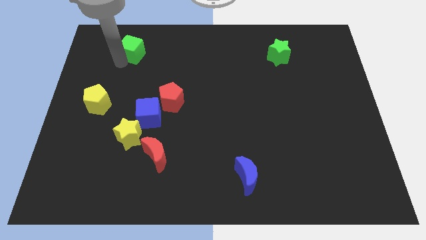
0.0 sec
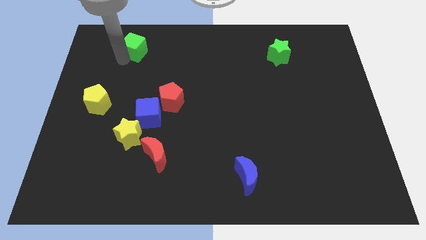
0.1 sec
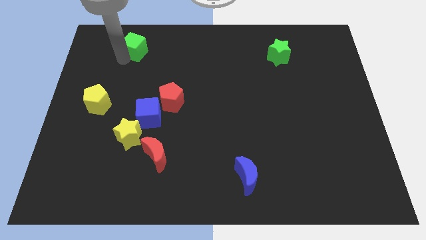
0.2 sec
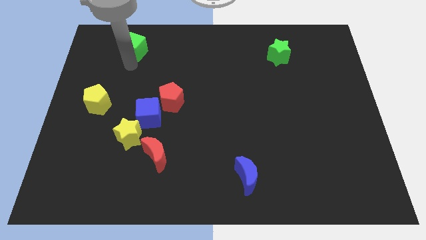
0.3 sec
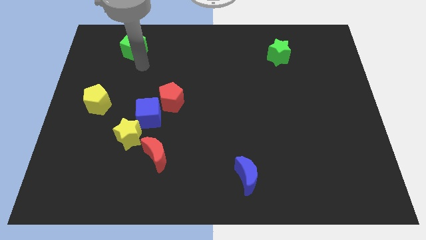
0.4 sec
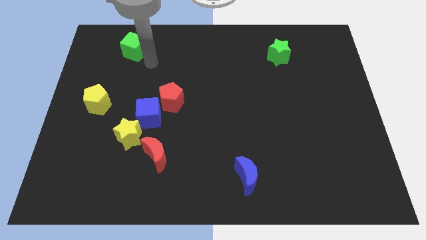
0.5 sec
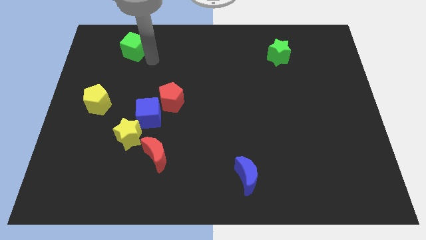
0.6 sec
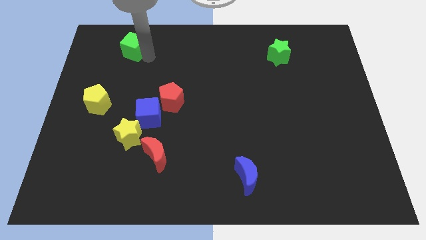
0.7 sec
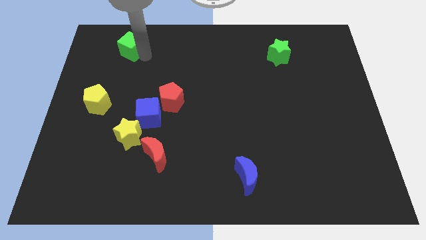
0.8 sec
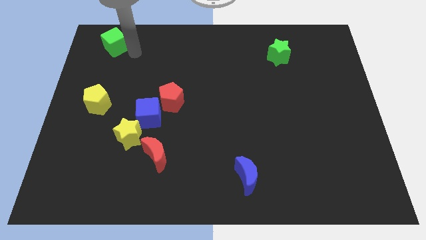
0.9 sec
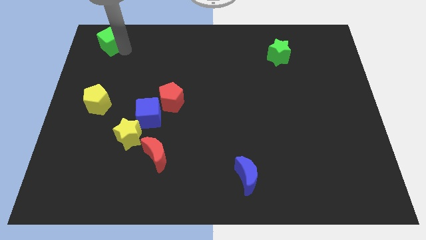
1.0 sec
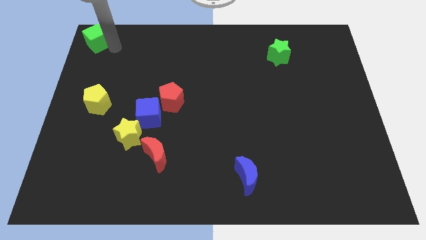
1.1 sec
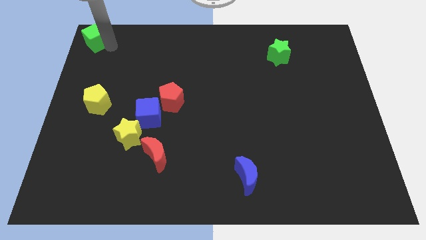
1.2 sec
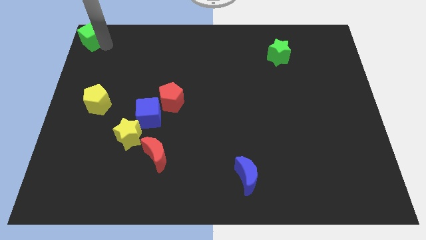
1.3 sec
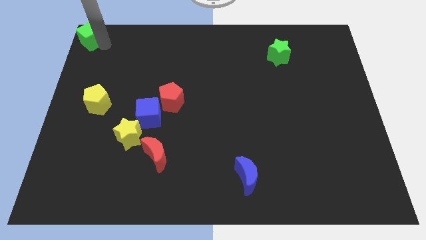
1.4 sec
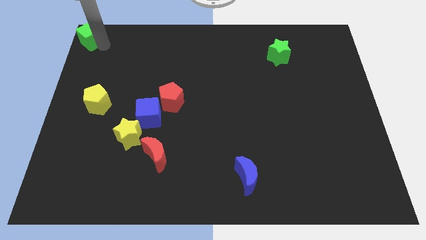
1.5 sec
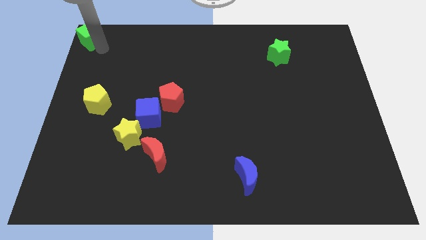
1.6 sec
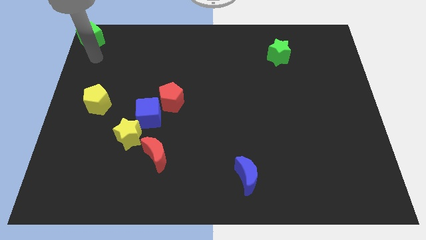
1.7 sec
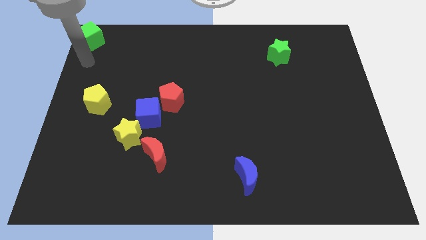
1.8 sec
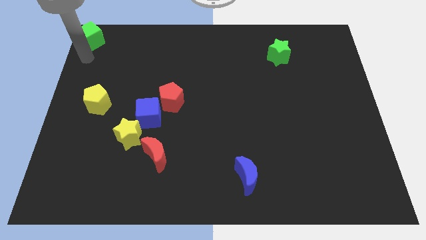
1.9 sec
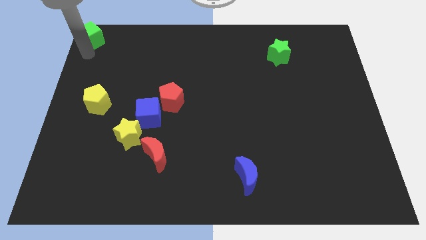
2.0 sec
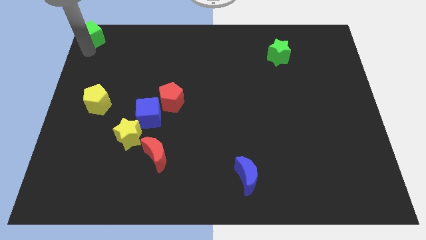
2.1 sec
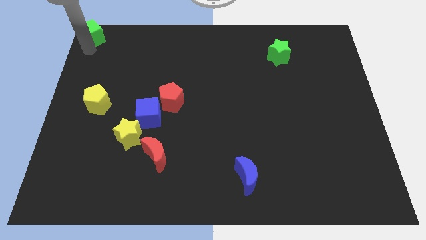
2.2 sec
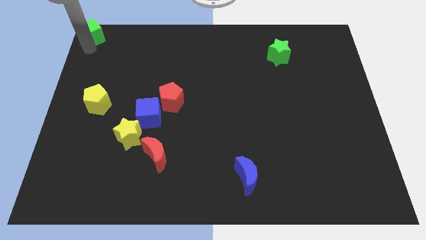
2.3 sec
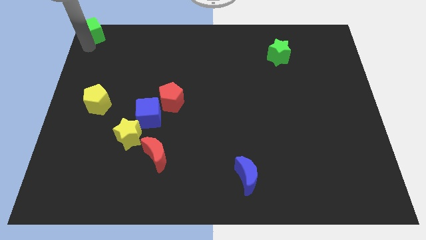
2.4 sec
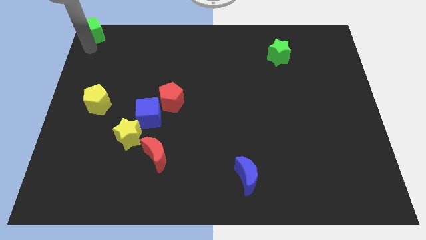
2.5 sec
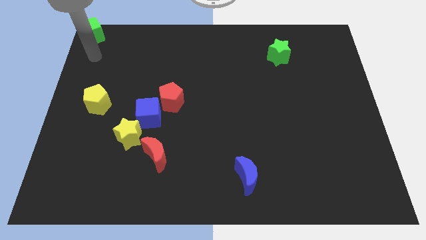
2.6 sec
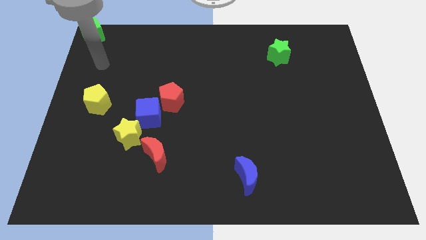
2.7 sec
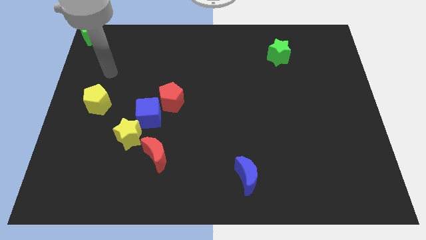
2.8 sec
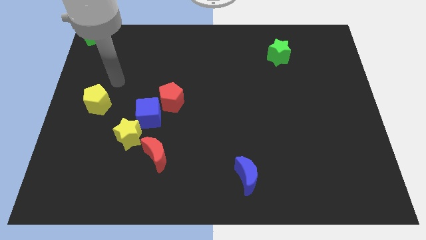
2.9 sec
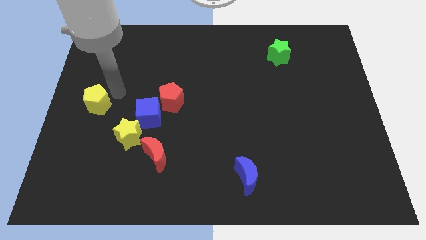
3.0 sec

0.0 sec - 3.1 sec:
slide green cube to top left corner

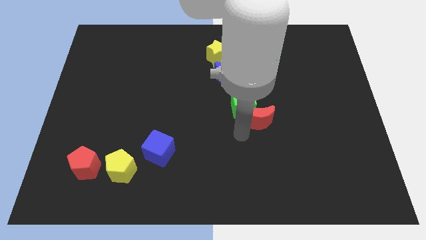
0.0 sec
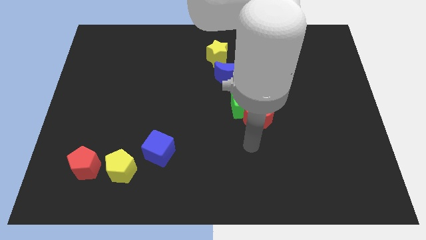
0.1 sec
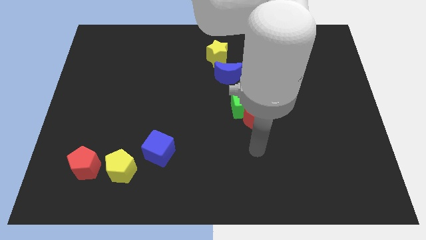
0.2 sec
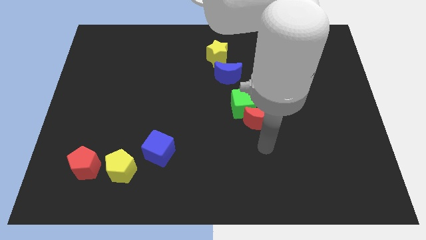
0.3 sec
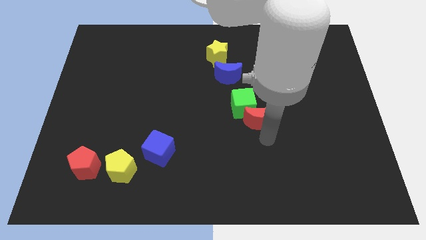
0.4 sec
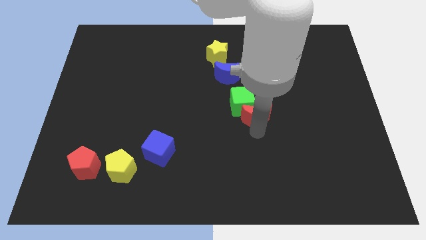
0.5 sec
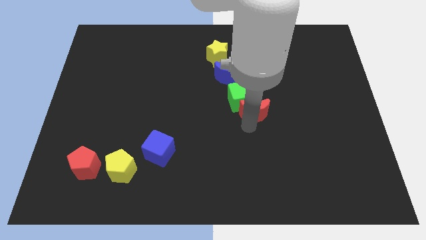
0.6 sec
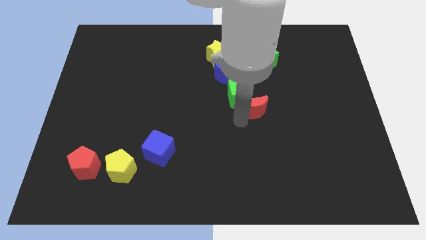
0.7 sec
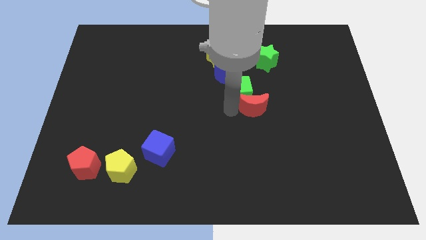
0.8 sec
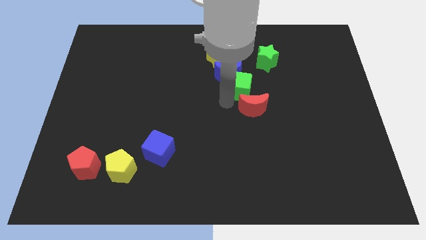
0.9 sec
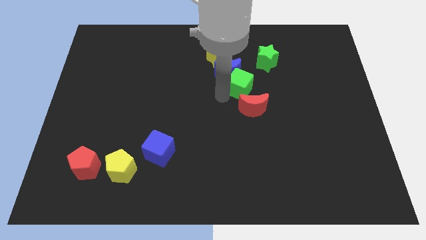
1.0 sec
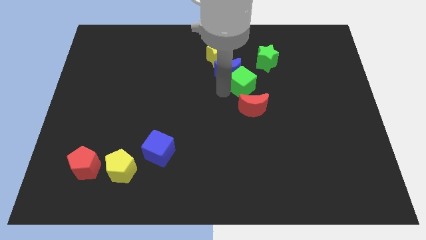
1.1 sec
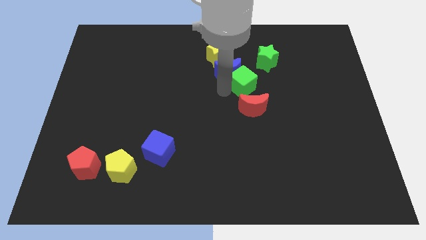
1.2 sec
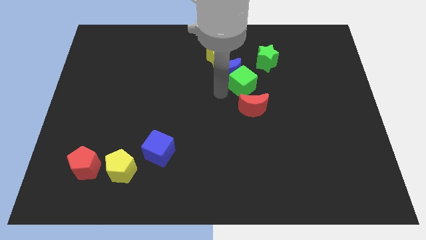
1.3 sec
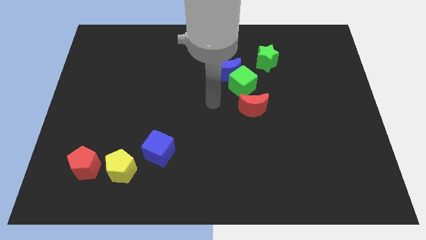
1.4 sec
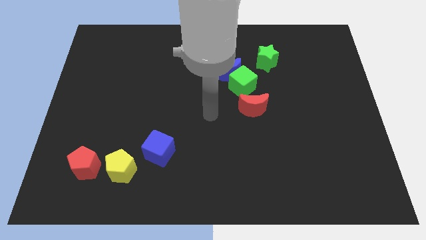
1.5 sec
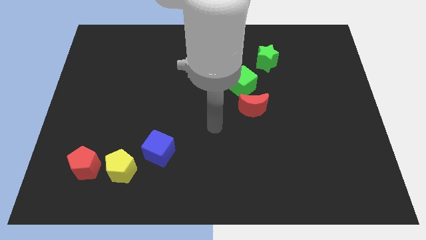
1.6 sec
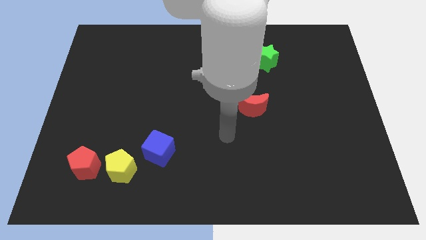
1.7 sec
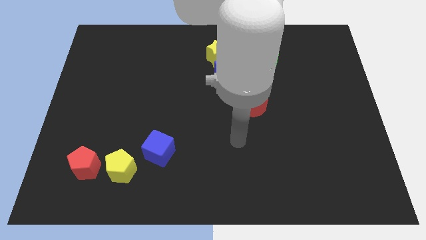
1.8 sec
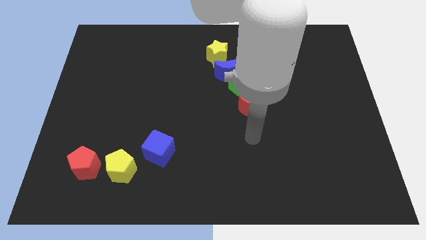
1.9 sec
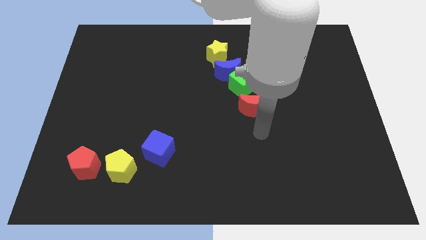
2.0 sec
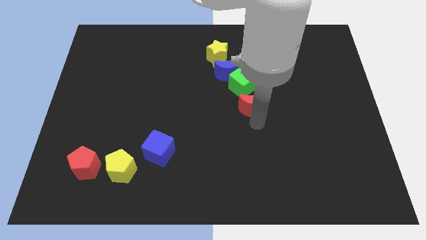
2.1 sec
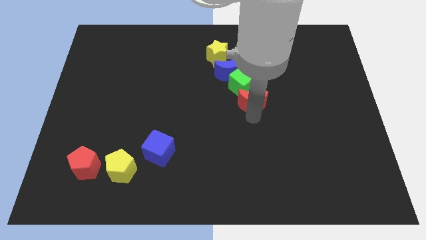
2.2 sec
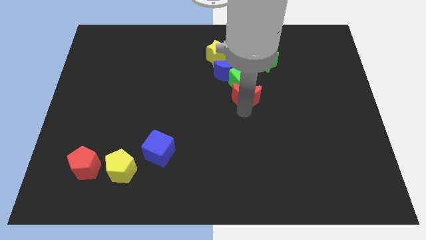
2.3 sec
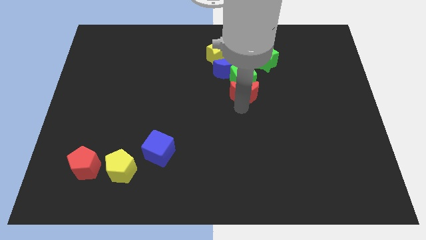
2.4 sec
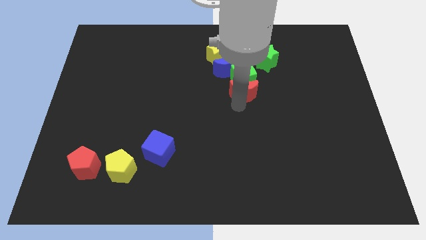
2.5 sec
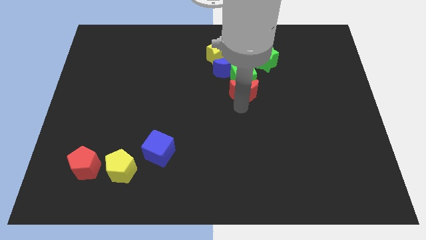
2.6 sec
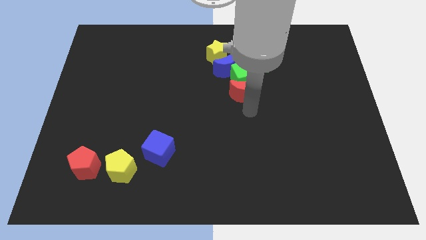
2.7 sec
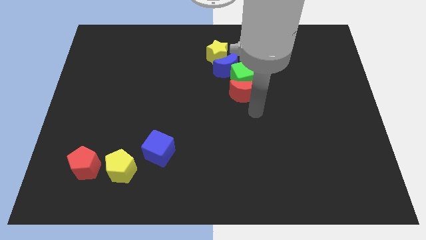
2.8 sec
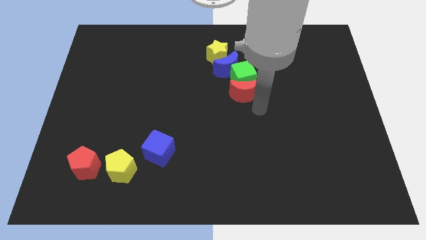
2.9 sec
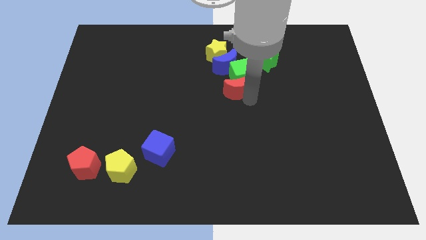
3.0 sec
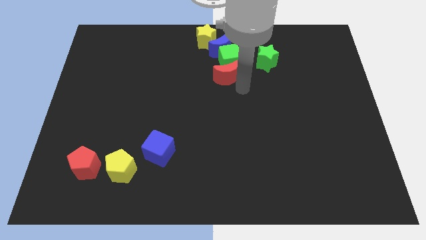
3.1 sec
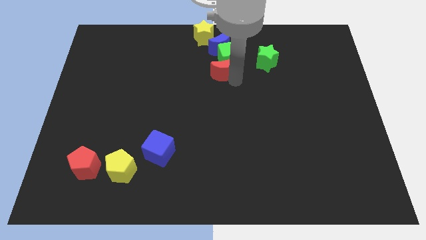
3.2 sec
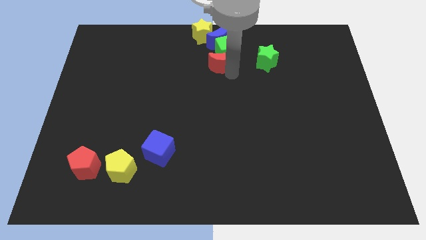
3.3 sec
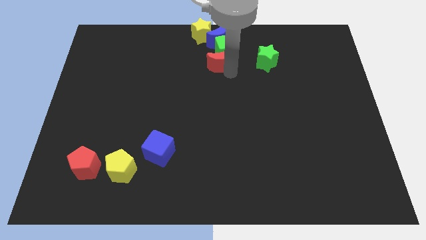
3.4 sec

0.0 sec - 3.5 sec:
push the red crescent to the top center of the board

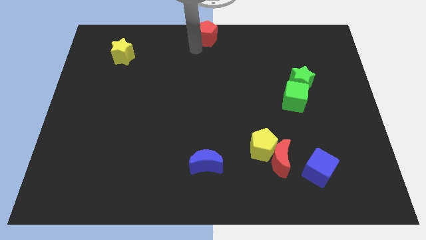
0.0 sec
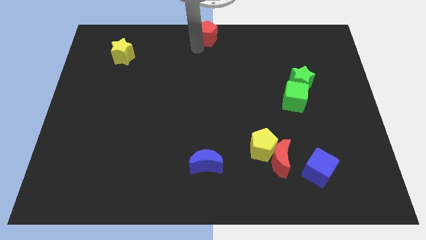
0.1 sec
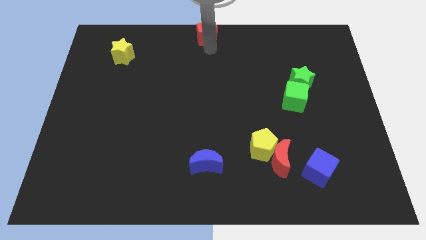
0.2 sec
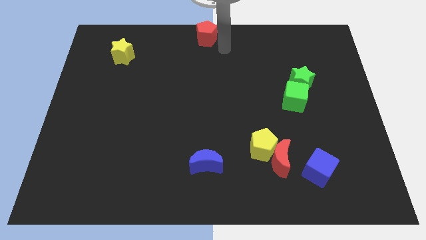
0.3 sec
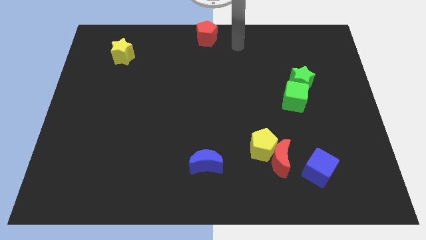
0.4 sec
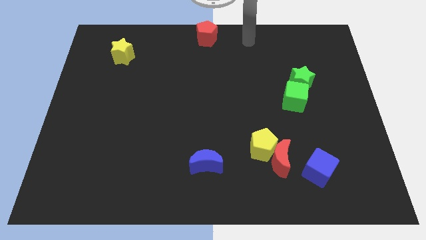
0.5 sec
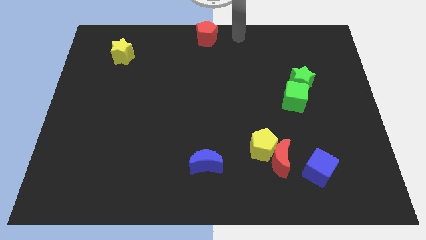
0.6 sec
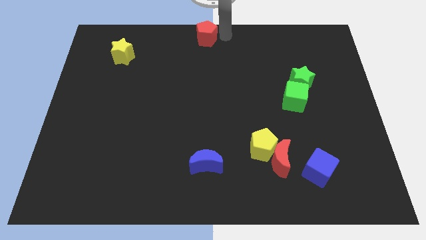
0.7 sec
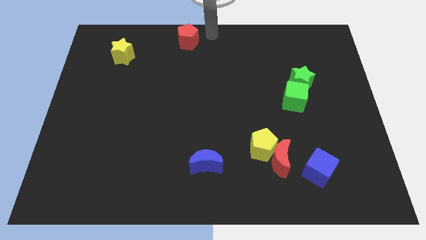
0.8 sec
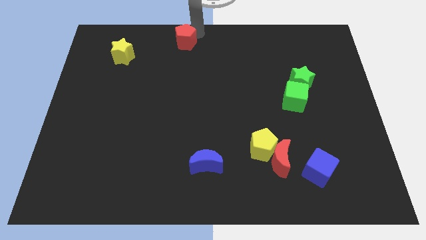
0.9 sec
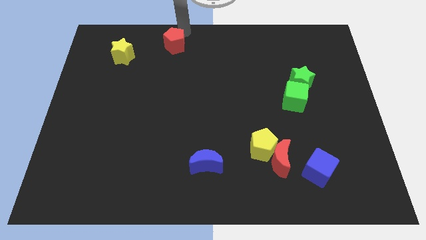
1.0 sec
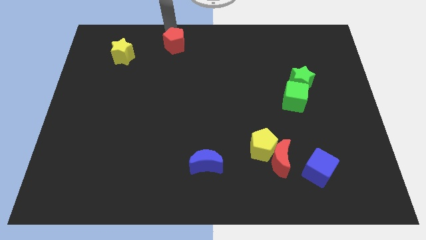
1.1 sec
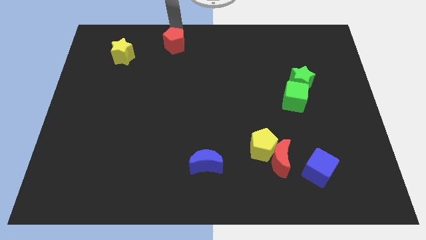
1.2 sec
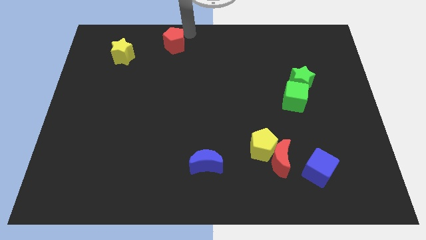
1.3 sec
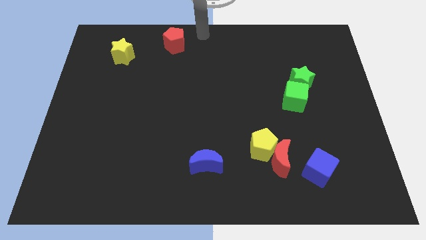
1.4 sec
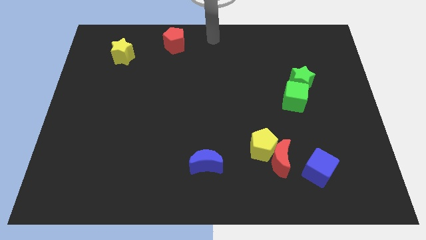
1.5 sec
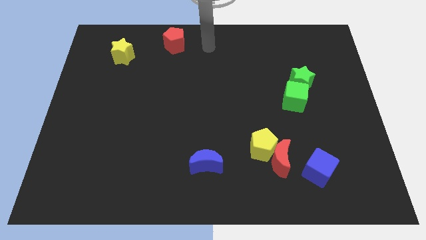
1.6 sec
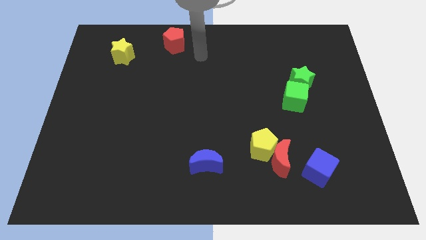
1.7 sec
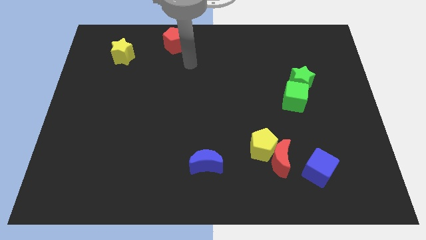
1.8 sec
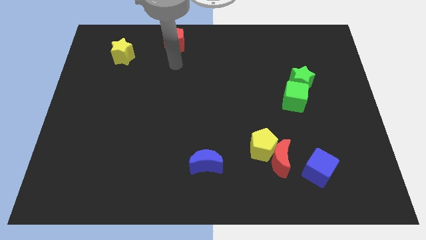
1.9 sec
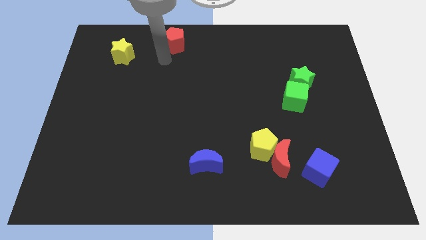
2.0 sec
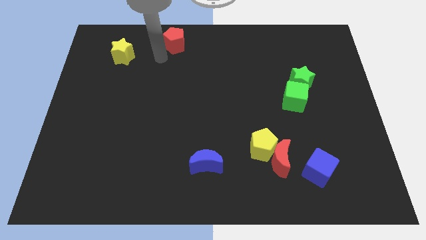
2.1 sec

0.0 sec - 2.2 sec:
slide the red pentagon slightly left

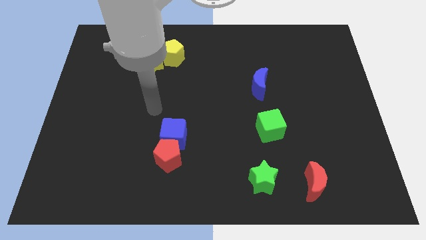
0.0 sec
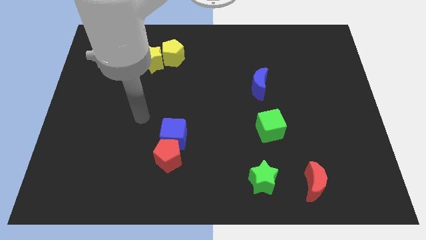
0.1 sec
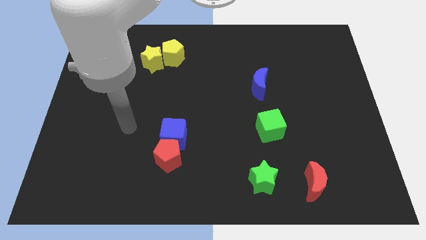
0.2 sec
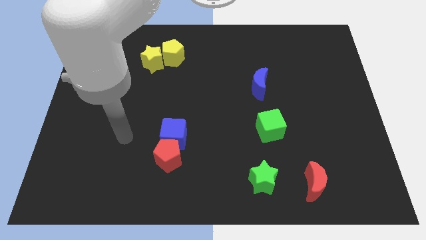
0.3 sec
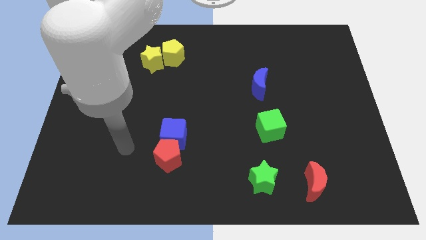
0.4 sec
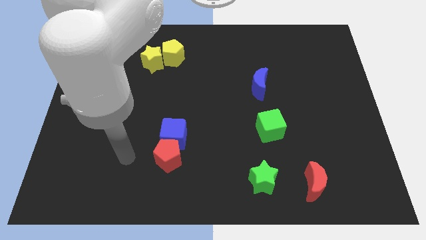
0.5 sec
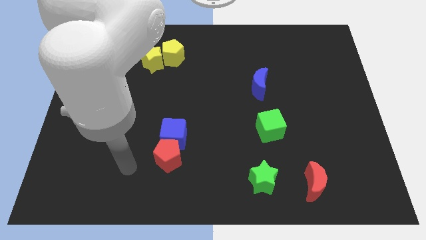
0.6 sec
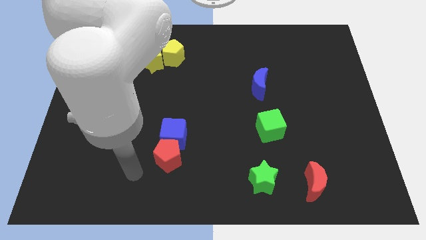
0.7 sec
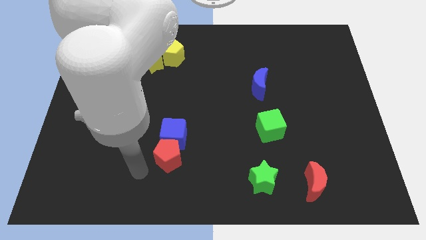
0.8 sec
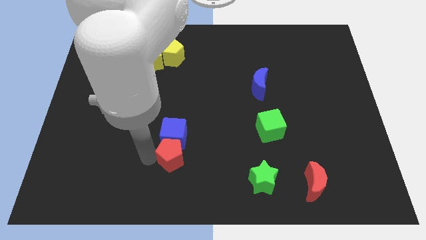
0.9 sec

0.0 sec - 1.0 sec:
go and place your hand near the red pentagon
